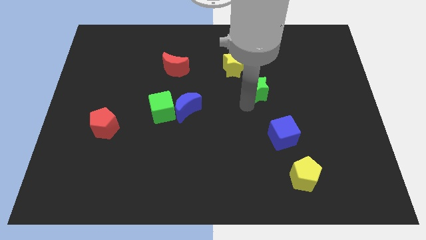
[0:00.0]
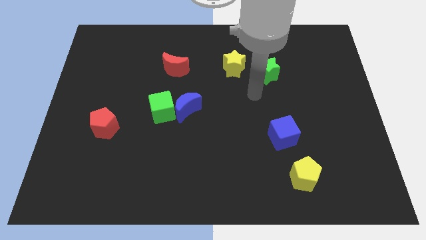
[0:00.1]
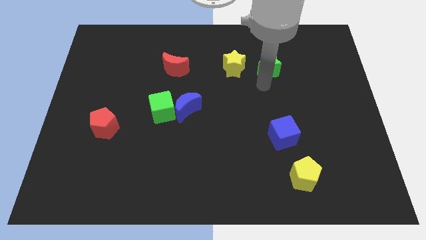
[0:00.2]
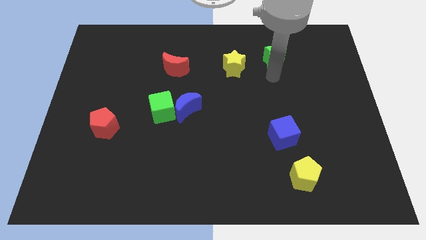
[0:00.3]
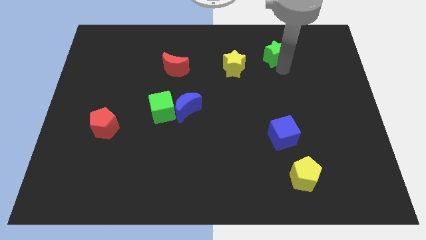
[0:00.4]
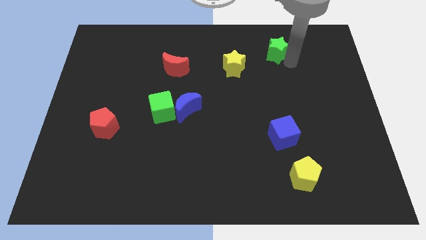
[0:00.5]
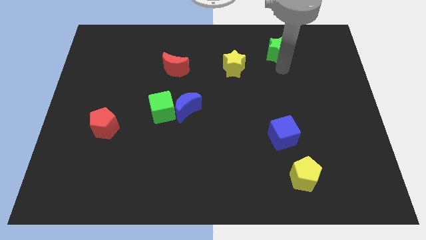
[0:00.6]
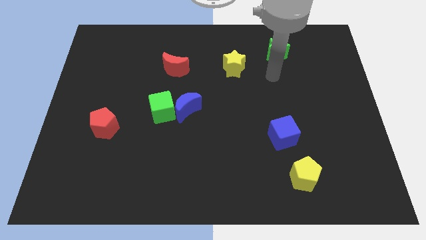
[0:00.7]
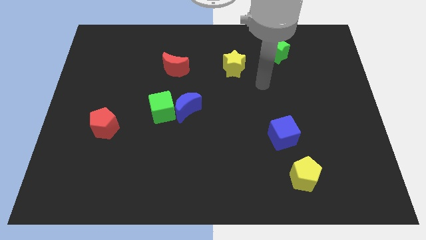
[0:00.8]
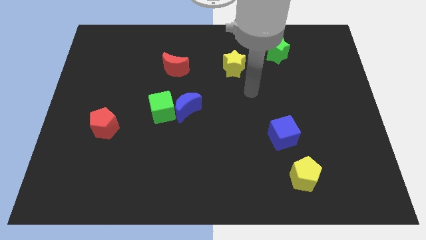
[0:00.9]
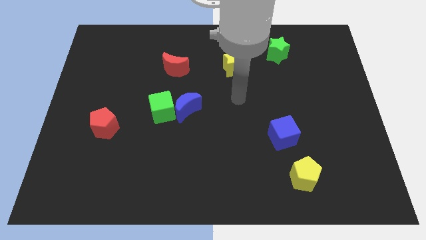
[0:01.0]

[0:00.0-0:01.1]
push the green star to the top of the board

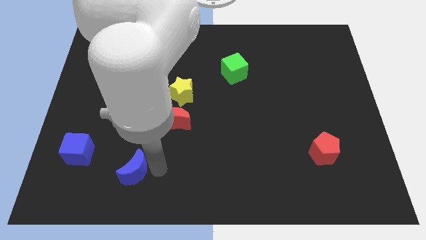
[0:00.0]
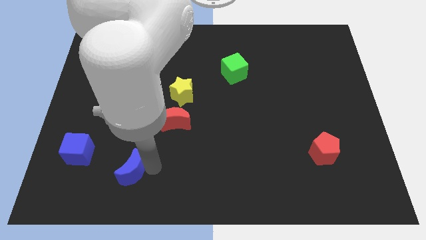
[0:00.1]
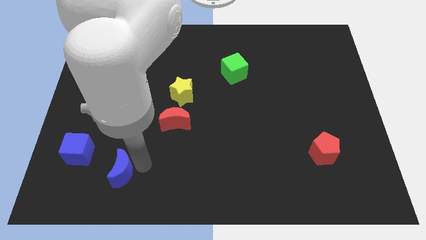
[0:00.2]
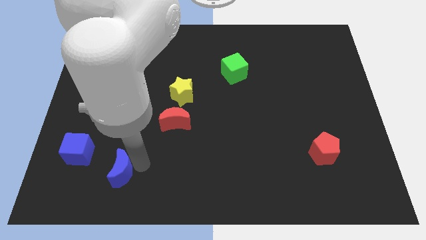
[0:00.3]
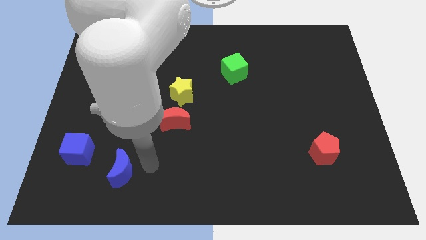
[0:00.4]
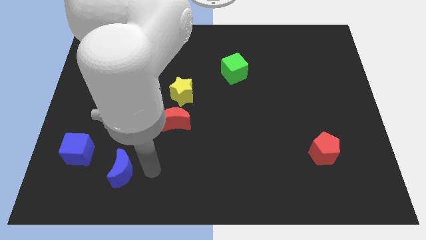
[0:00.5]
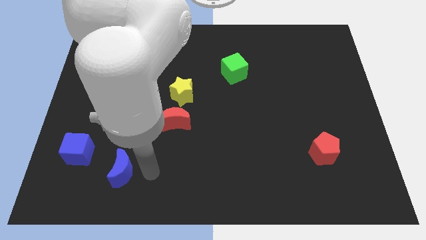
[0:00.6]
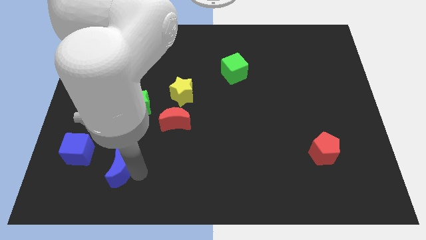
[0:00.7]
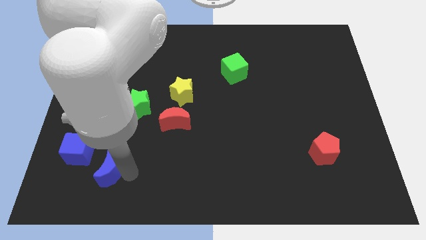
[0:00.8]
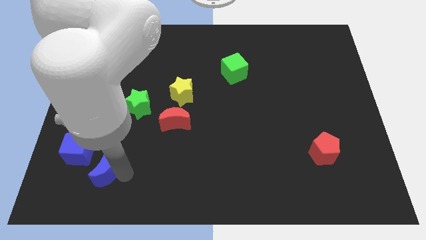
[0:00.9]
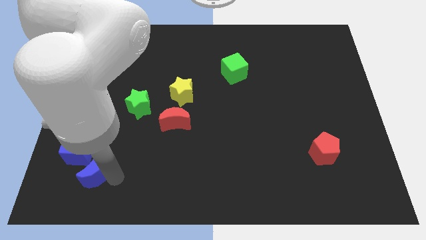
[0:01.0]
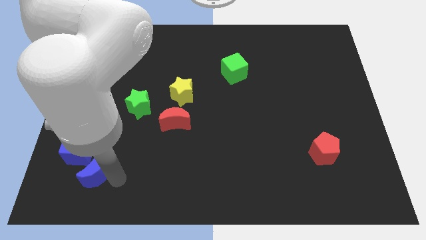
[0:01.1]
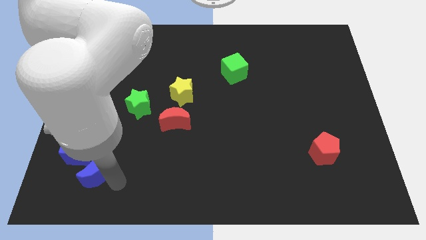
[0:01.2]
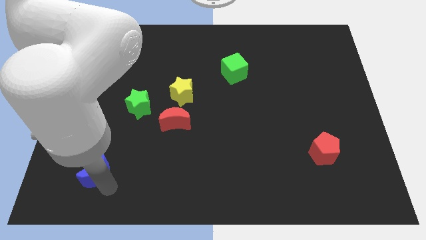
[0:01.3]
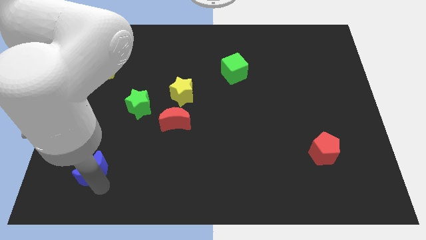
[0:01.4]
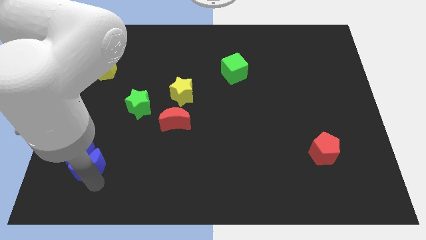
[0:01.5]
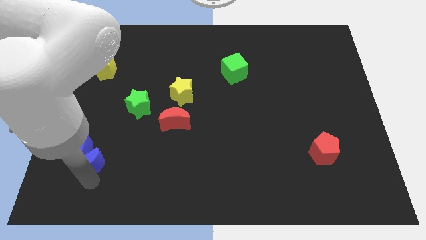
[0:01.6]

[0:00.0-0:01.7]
move blue moon into the blue cube

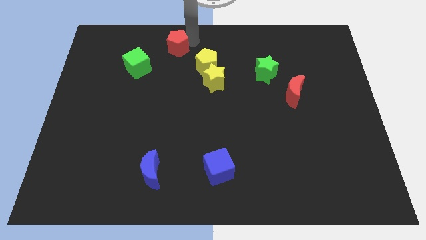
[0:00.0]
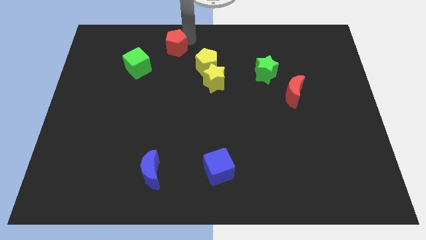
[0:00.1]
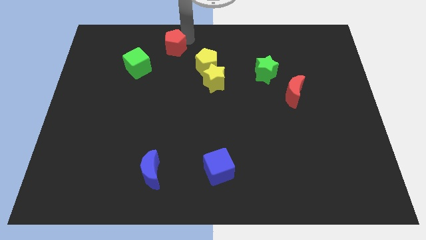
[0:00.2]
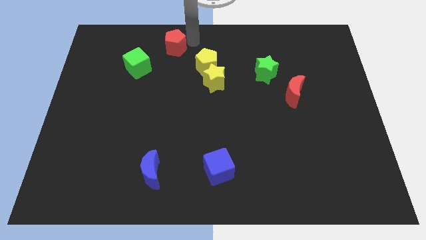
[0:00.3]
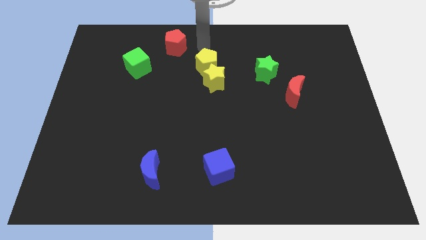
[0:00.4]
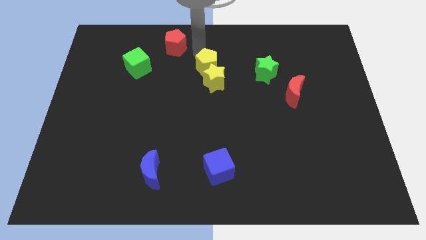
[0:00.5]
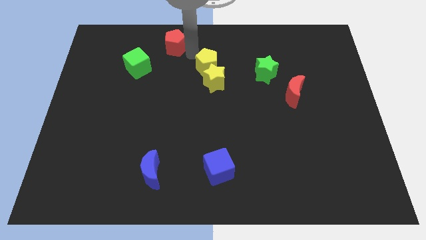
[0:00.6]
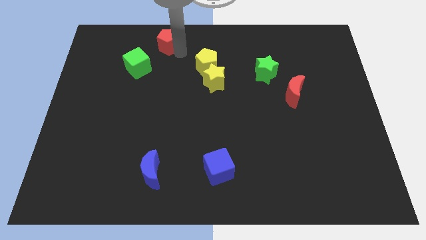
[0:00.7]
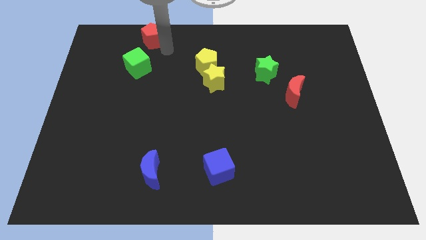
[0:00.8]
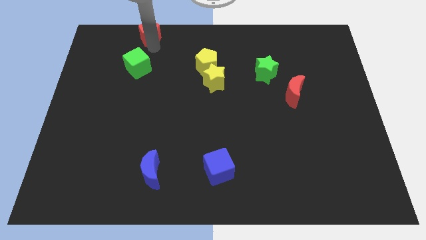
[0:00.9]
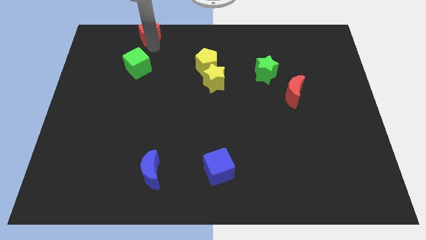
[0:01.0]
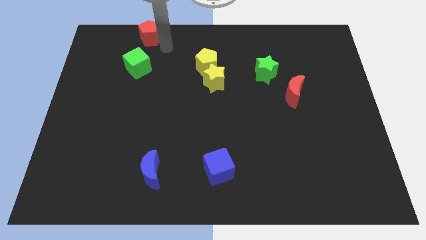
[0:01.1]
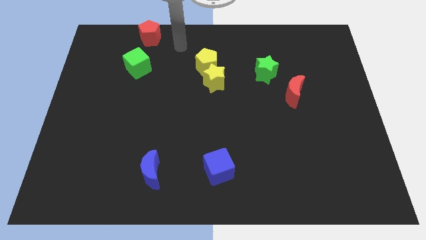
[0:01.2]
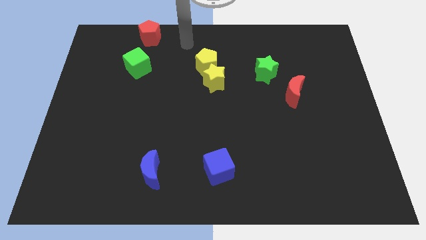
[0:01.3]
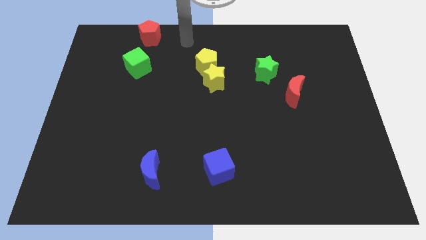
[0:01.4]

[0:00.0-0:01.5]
push the red pentagon to the top of the green cube

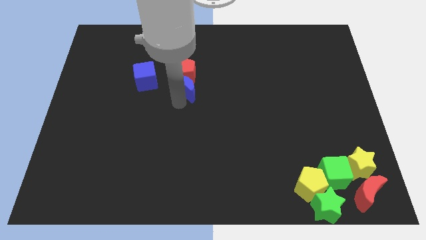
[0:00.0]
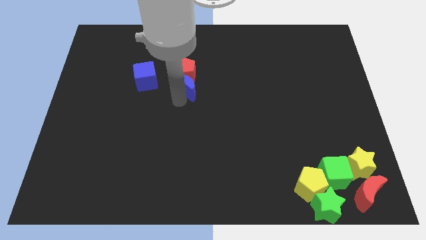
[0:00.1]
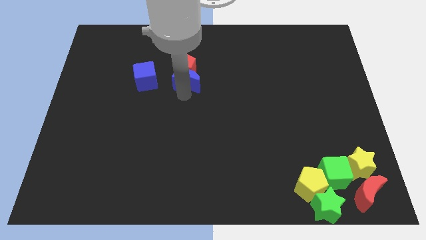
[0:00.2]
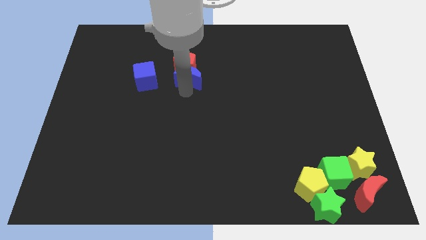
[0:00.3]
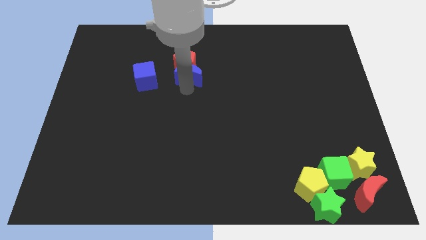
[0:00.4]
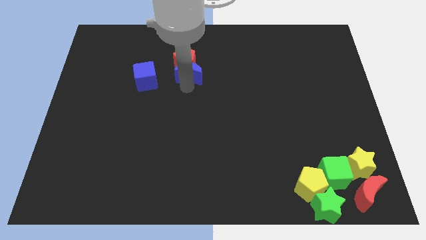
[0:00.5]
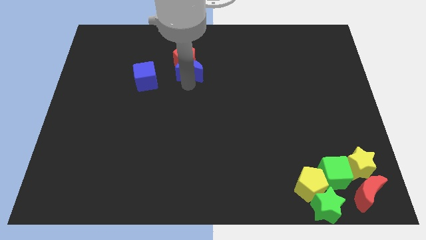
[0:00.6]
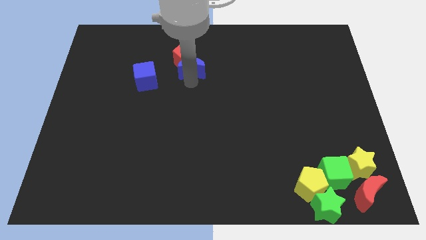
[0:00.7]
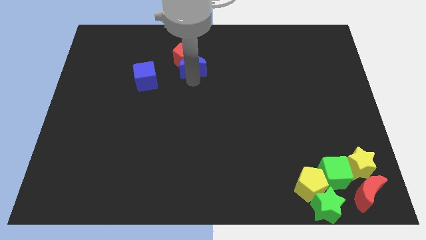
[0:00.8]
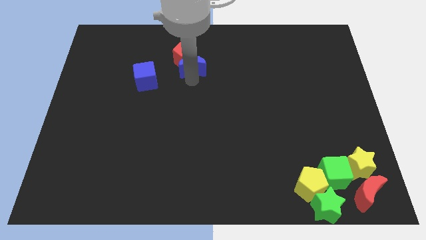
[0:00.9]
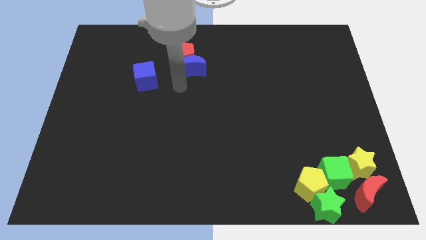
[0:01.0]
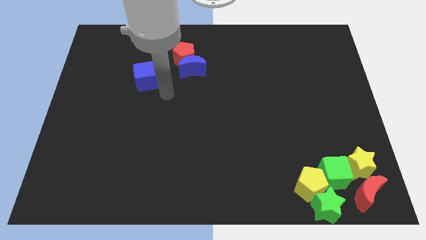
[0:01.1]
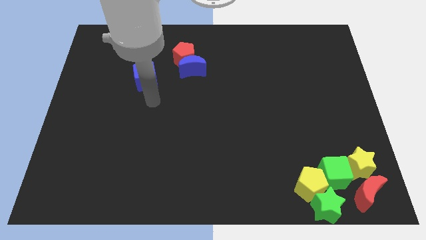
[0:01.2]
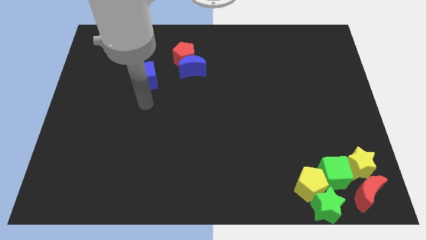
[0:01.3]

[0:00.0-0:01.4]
drag the blue crescent and red pentagon towards the top center of the board

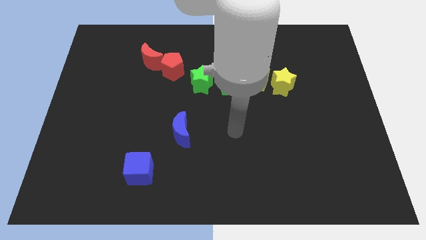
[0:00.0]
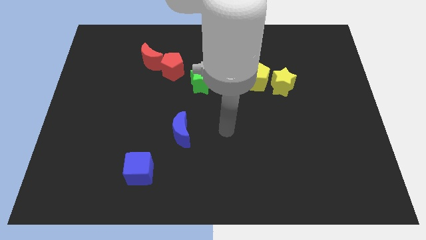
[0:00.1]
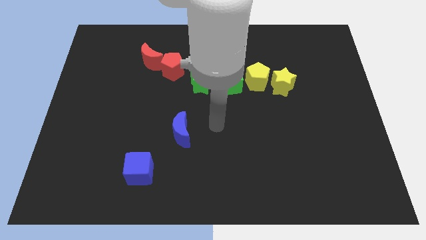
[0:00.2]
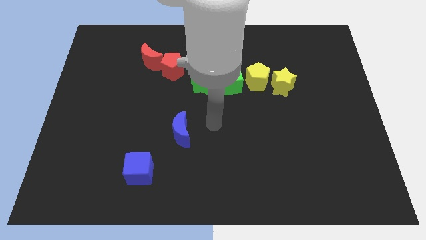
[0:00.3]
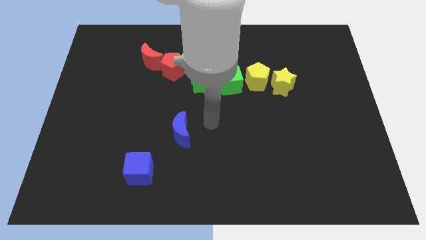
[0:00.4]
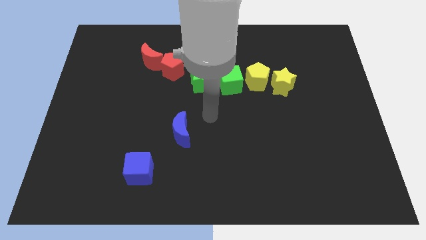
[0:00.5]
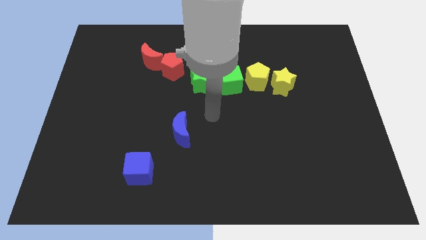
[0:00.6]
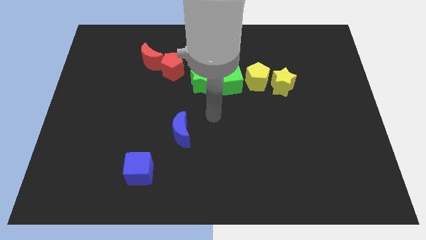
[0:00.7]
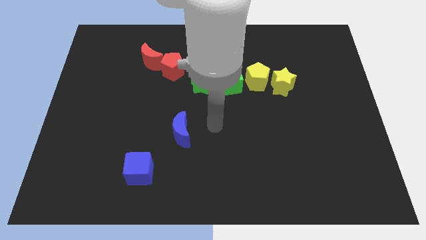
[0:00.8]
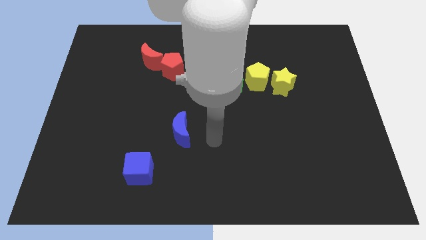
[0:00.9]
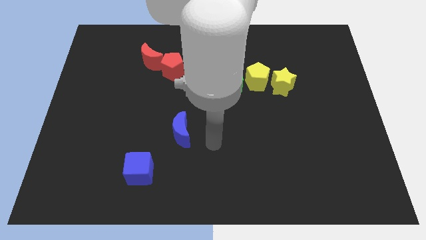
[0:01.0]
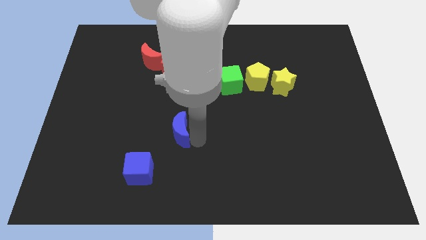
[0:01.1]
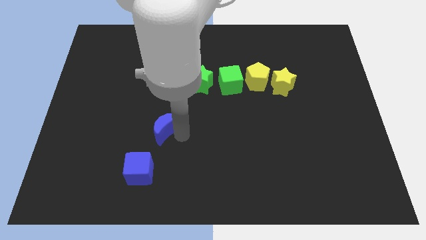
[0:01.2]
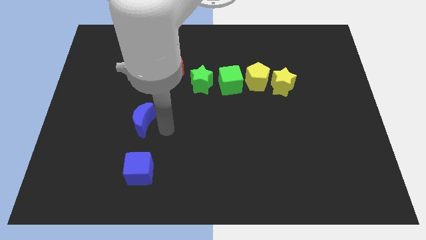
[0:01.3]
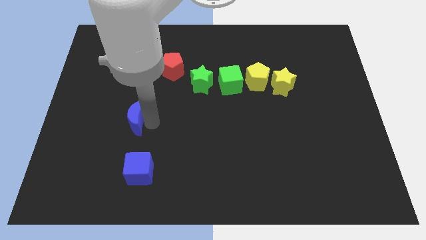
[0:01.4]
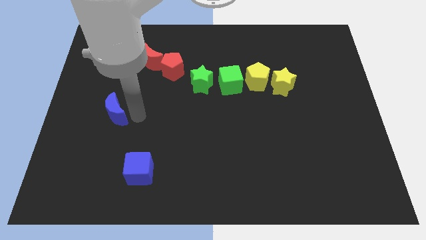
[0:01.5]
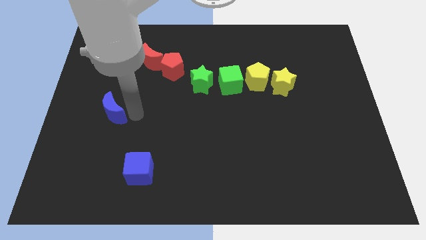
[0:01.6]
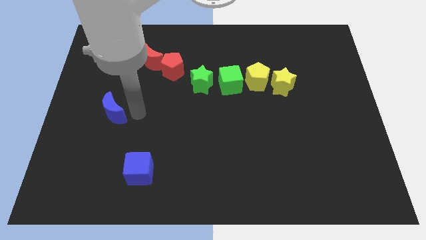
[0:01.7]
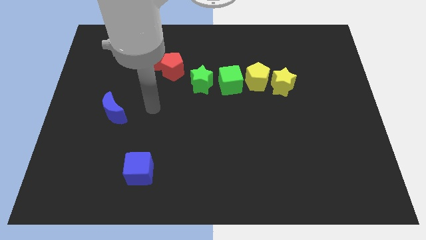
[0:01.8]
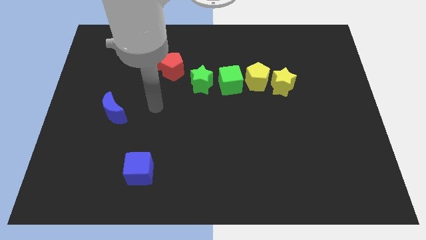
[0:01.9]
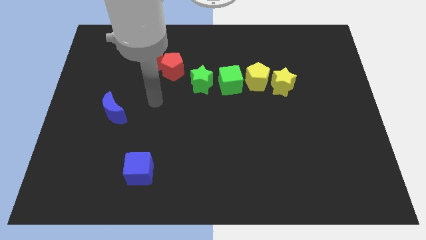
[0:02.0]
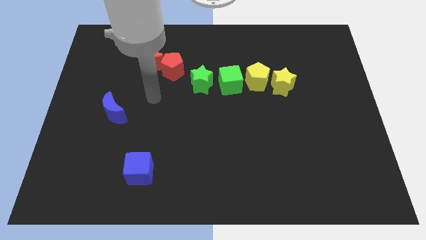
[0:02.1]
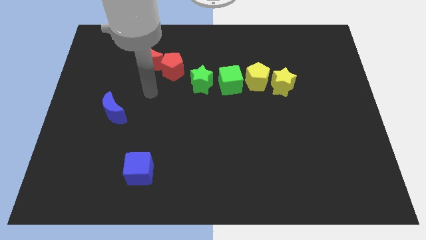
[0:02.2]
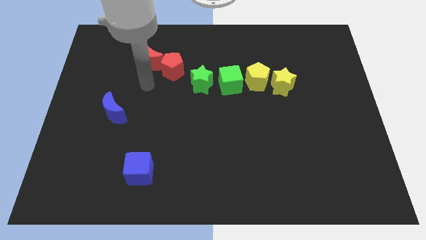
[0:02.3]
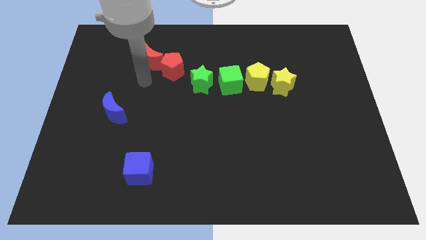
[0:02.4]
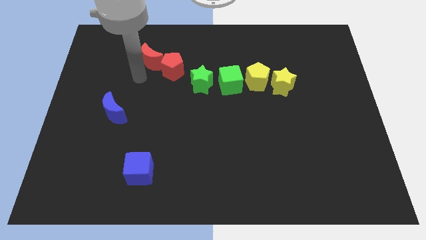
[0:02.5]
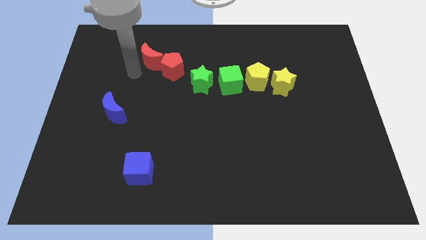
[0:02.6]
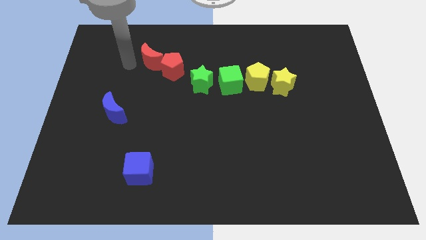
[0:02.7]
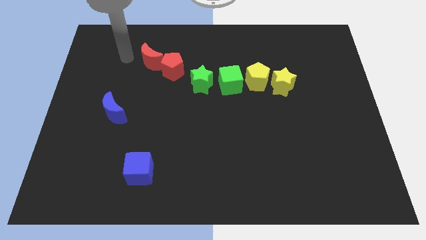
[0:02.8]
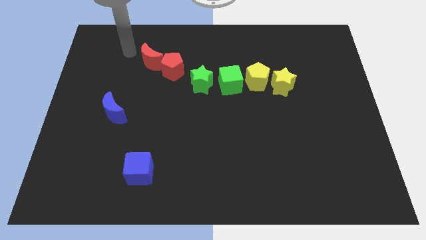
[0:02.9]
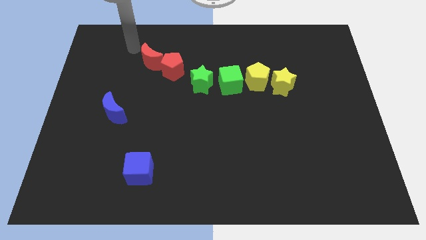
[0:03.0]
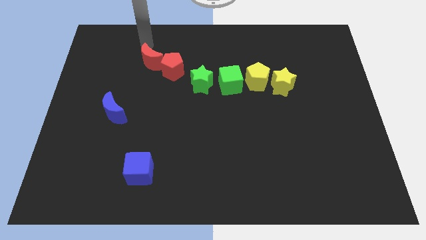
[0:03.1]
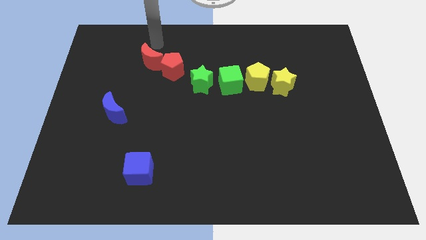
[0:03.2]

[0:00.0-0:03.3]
move the blue crescent towards the left center of the board
